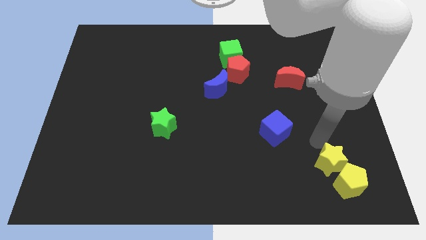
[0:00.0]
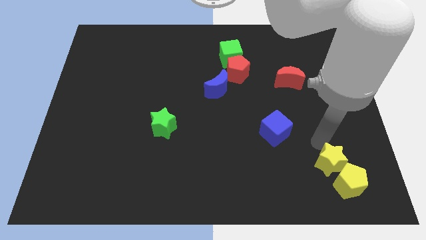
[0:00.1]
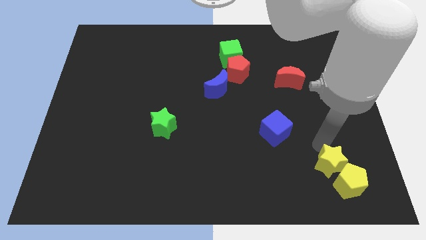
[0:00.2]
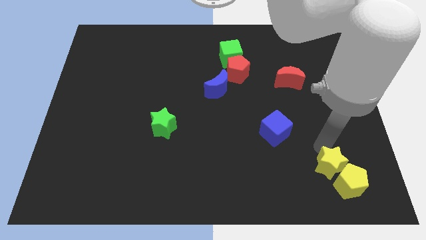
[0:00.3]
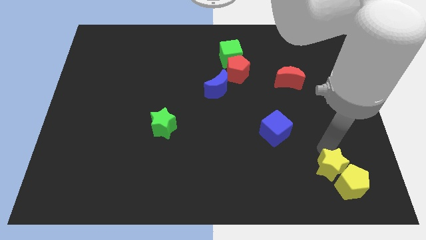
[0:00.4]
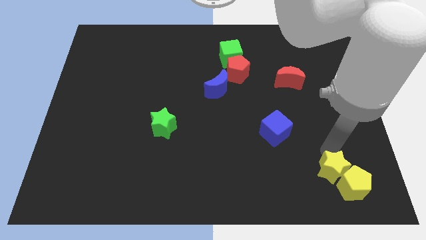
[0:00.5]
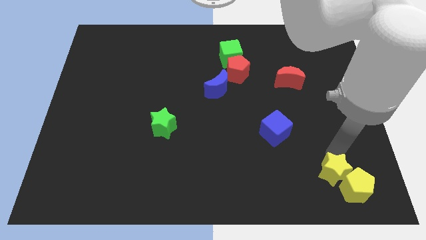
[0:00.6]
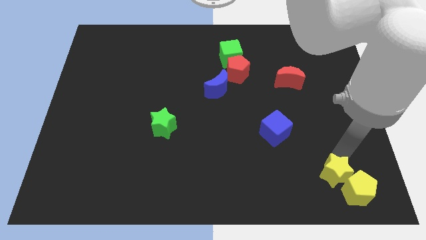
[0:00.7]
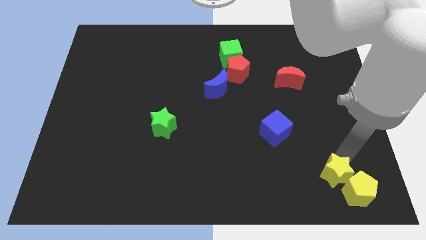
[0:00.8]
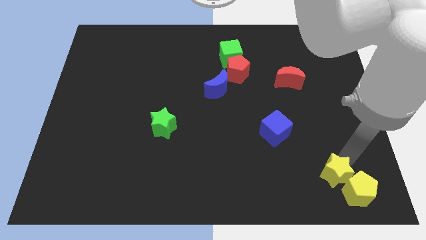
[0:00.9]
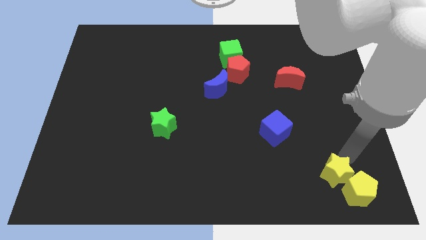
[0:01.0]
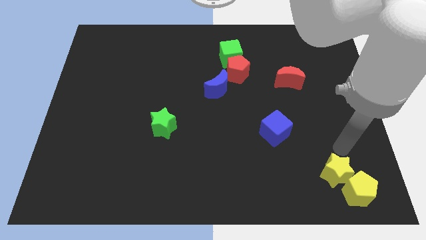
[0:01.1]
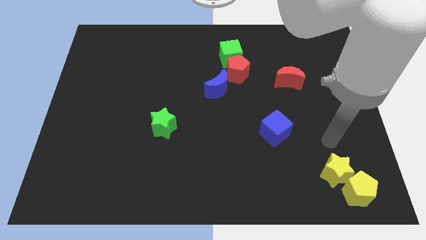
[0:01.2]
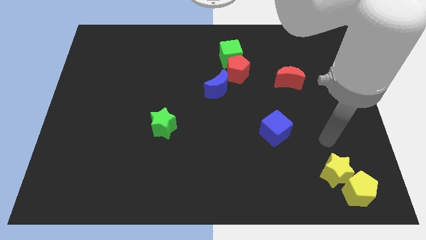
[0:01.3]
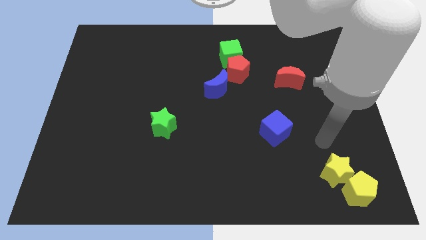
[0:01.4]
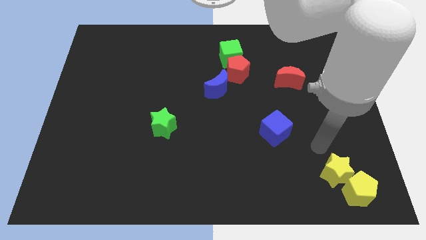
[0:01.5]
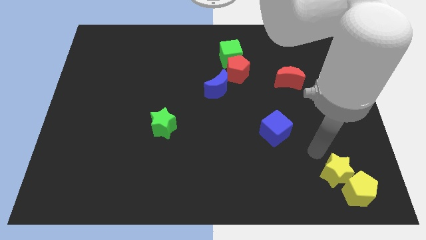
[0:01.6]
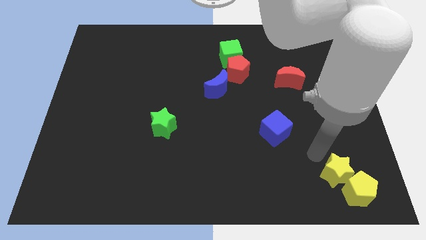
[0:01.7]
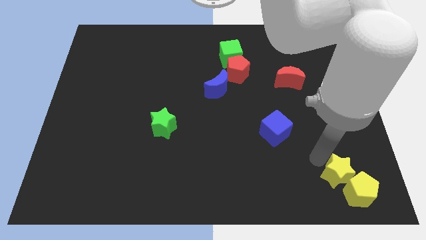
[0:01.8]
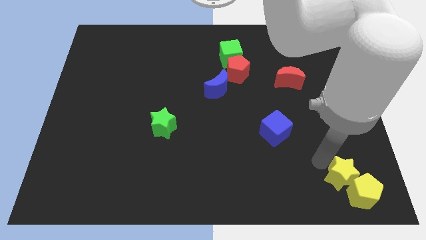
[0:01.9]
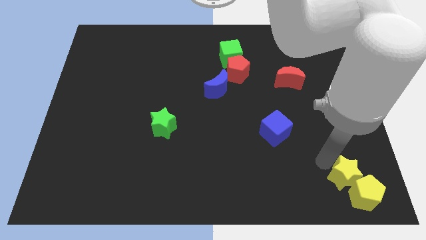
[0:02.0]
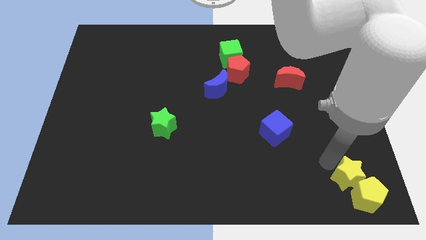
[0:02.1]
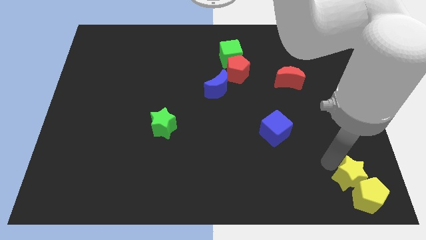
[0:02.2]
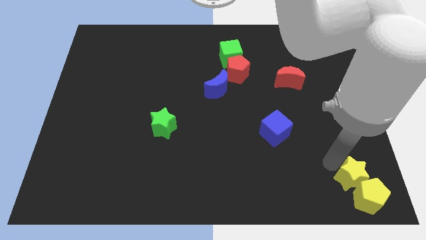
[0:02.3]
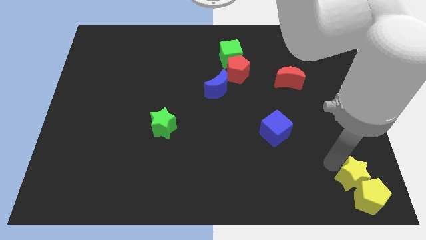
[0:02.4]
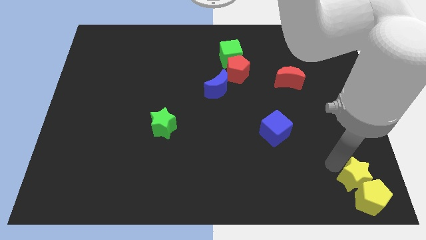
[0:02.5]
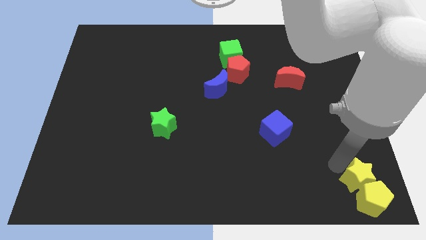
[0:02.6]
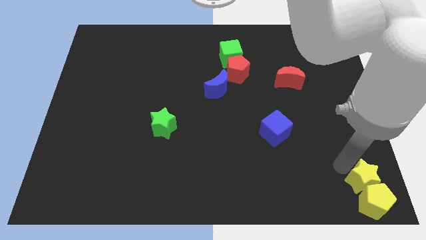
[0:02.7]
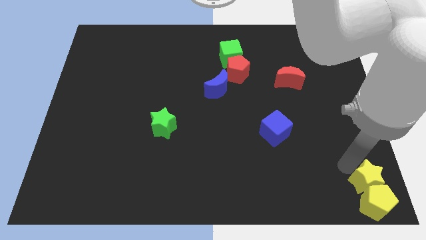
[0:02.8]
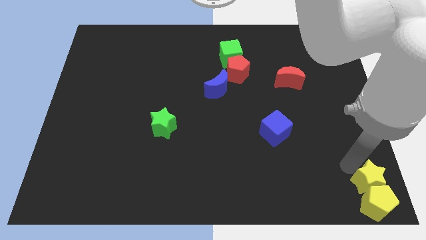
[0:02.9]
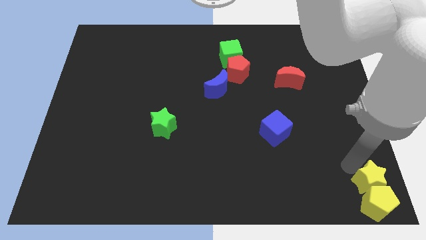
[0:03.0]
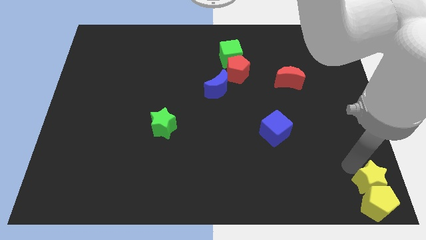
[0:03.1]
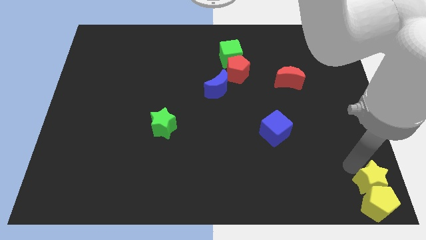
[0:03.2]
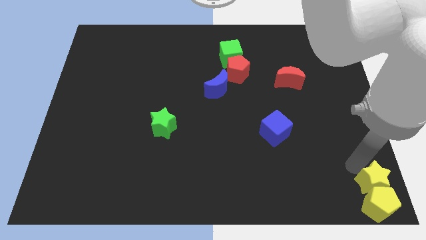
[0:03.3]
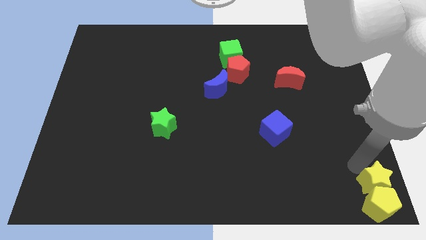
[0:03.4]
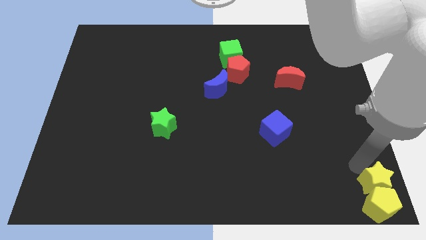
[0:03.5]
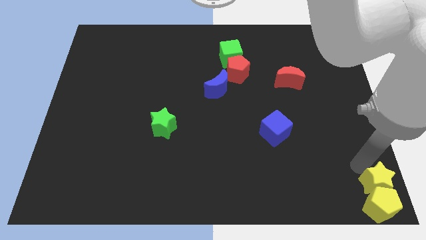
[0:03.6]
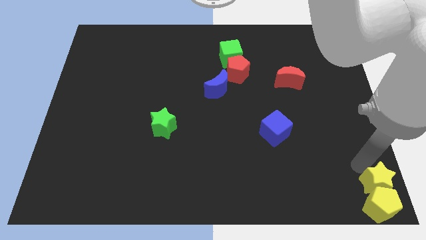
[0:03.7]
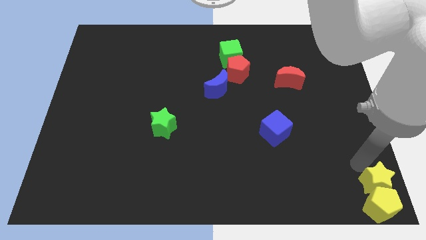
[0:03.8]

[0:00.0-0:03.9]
place the yellow star and yellow pentagon to the right bottom

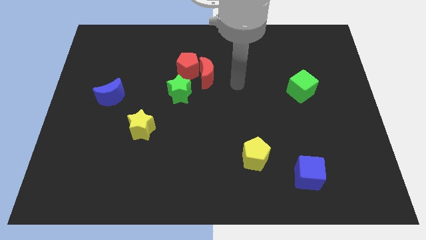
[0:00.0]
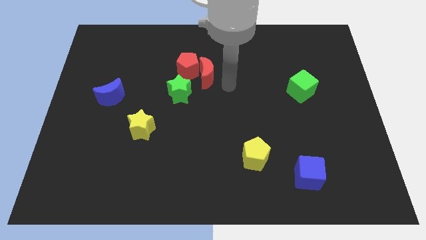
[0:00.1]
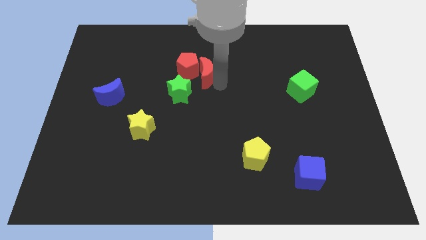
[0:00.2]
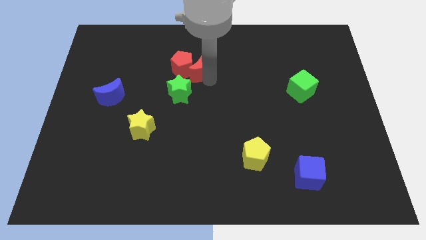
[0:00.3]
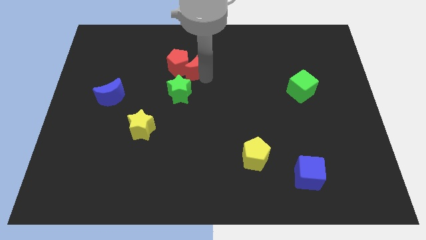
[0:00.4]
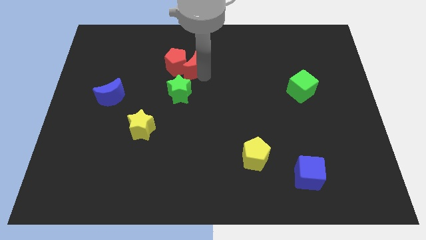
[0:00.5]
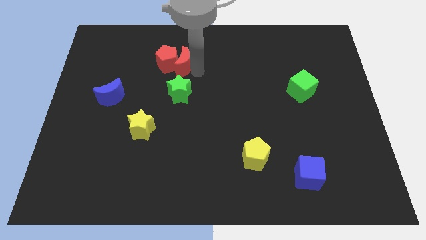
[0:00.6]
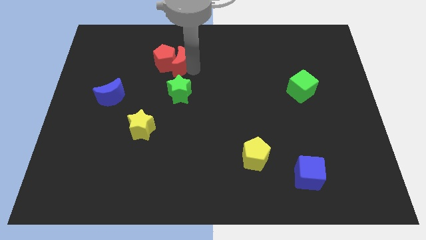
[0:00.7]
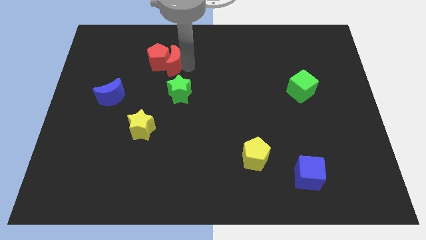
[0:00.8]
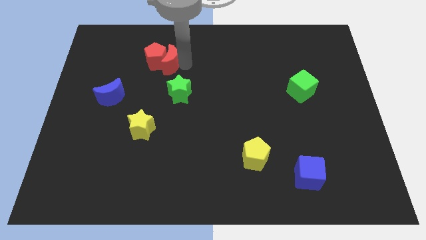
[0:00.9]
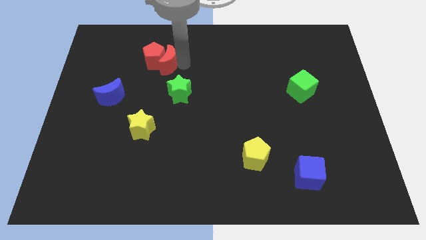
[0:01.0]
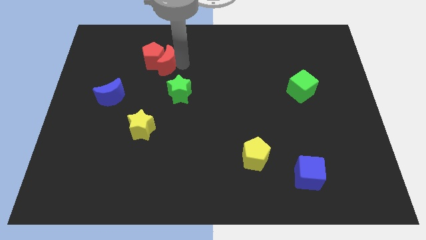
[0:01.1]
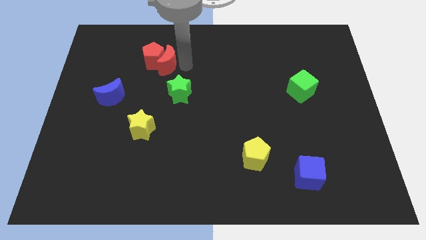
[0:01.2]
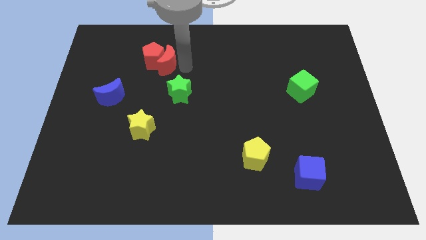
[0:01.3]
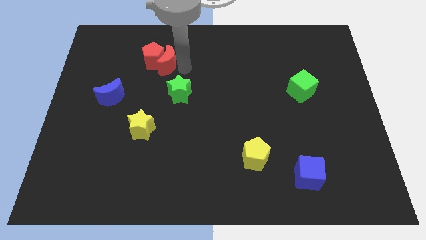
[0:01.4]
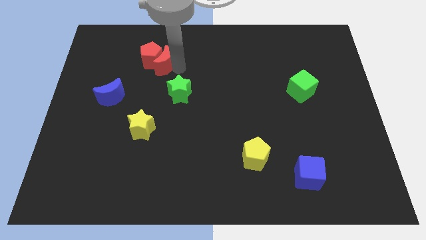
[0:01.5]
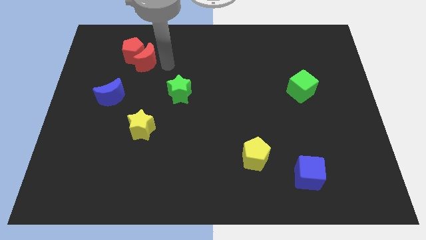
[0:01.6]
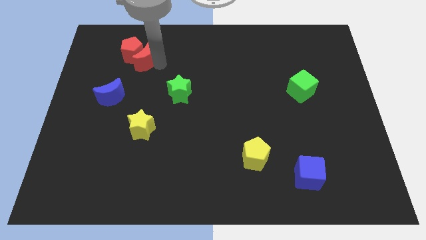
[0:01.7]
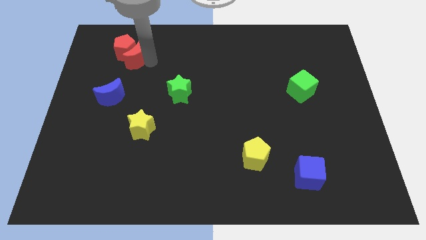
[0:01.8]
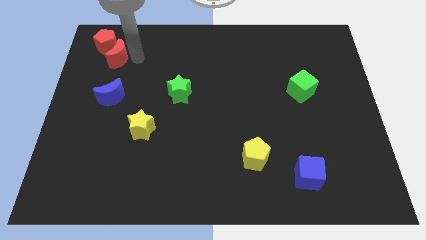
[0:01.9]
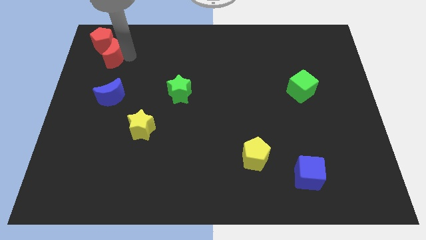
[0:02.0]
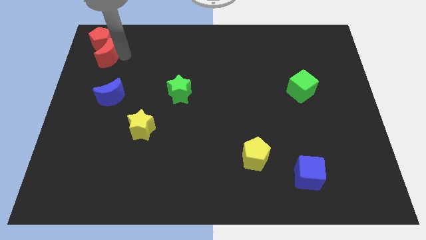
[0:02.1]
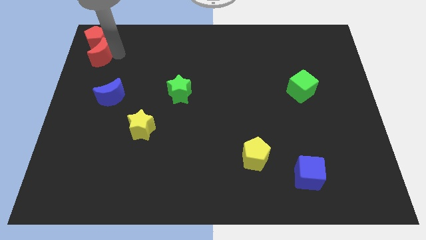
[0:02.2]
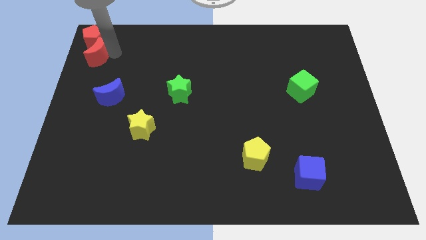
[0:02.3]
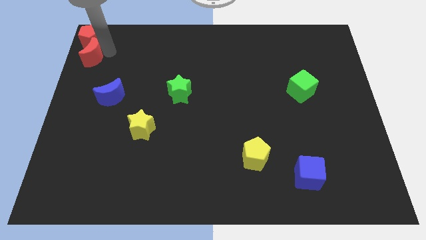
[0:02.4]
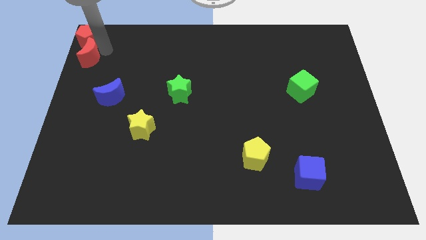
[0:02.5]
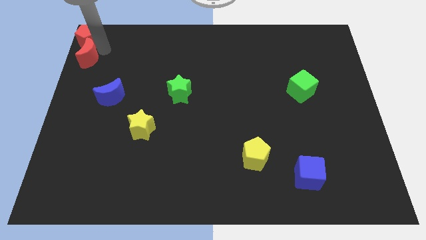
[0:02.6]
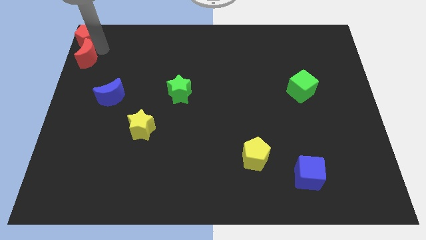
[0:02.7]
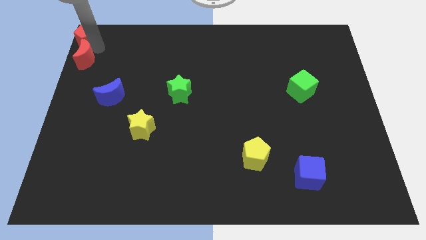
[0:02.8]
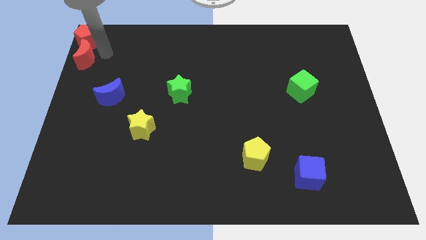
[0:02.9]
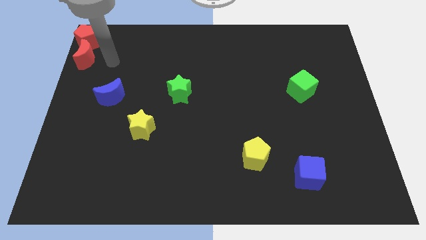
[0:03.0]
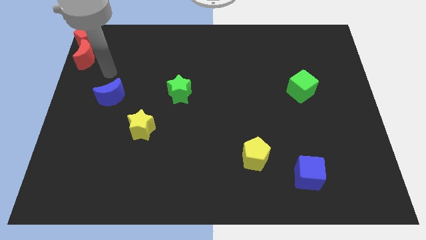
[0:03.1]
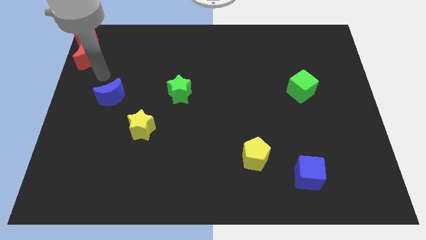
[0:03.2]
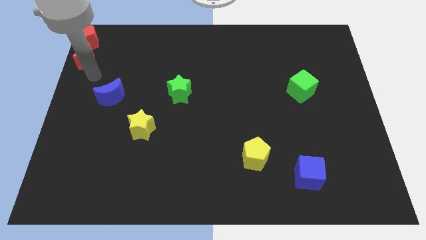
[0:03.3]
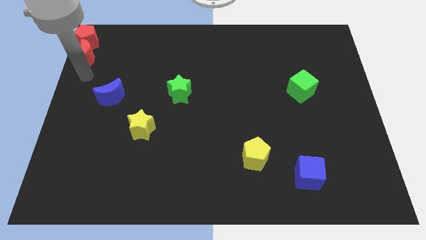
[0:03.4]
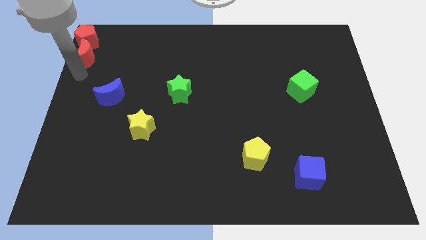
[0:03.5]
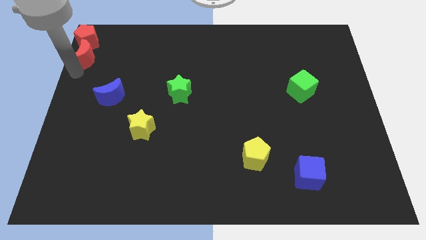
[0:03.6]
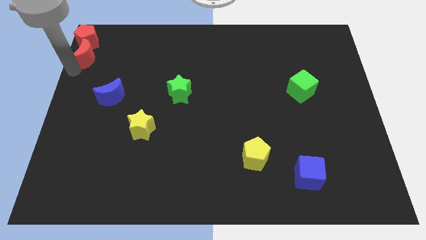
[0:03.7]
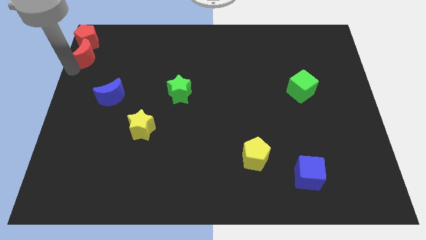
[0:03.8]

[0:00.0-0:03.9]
push the red pentagon and red crescent towards the top left corner of the board

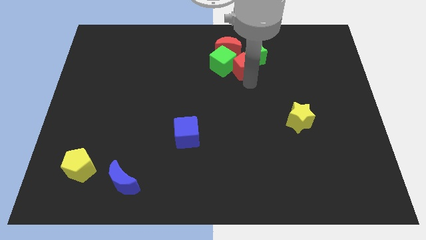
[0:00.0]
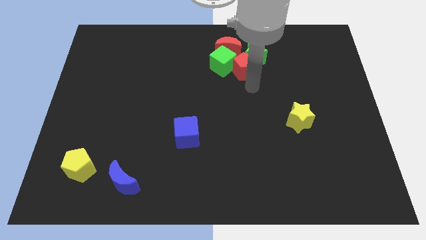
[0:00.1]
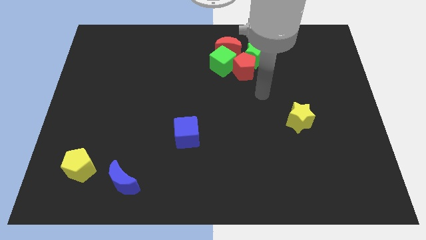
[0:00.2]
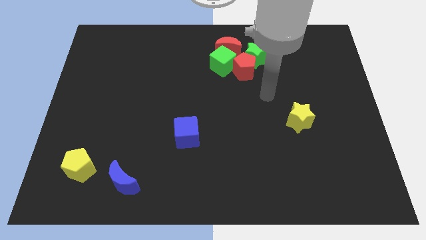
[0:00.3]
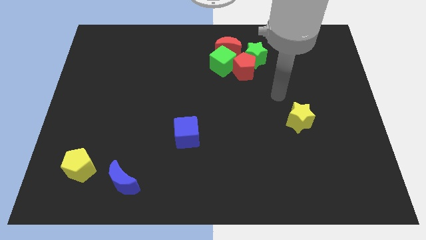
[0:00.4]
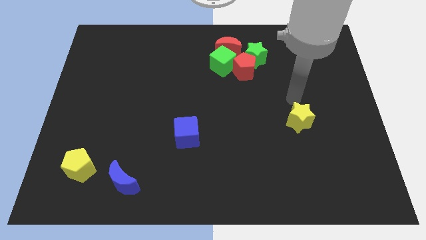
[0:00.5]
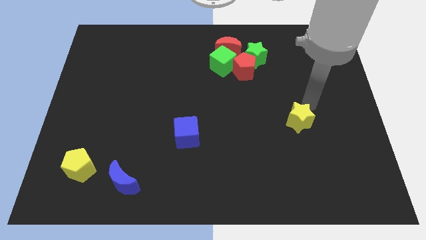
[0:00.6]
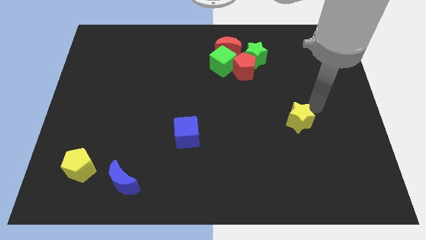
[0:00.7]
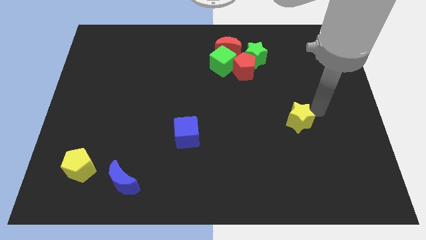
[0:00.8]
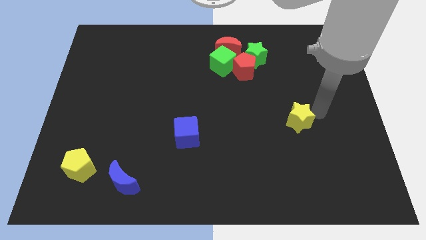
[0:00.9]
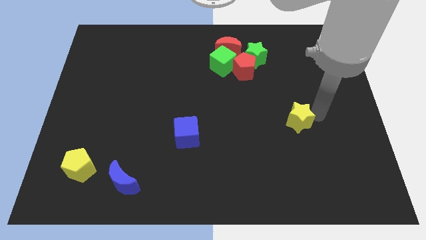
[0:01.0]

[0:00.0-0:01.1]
move your arm close to yellow star
